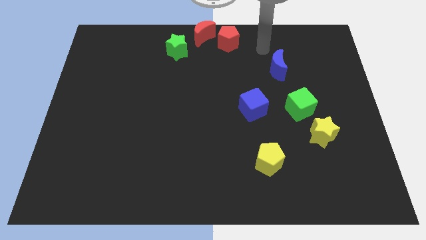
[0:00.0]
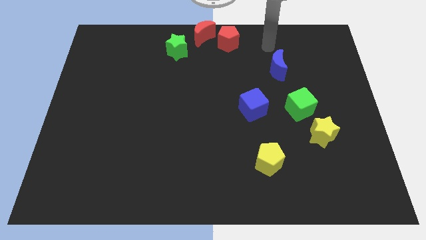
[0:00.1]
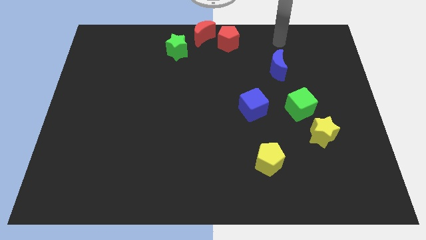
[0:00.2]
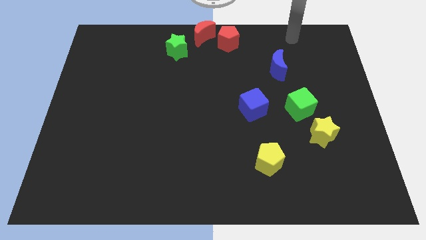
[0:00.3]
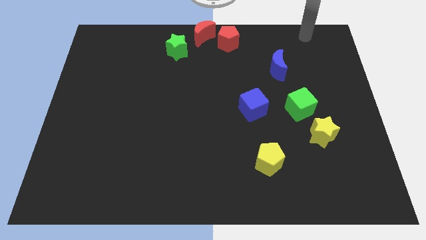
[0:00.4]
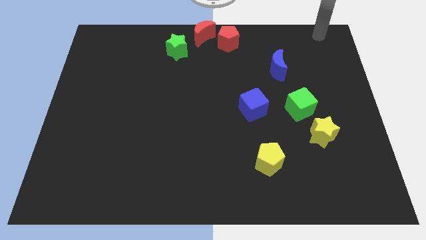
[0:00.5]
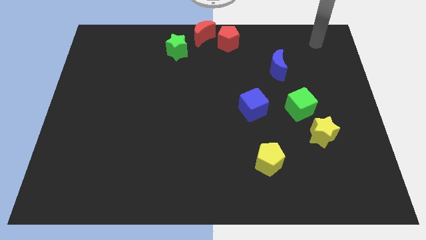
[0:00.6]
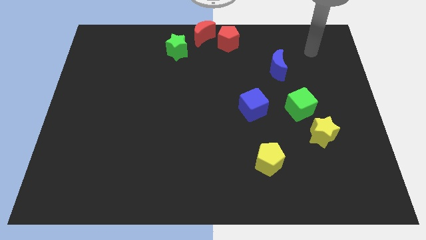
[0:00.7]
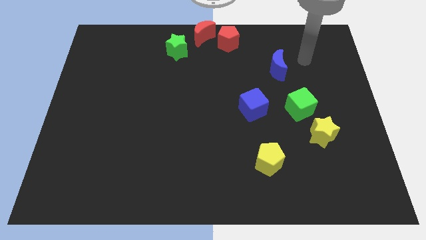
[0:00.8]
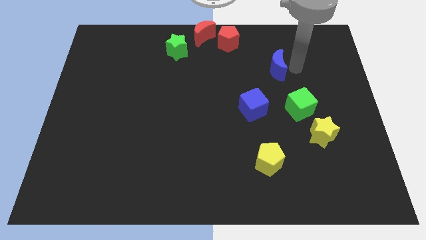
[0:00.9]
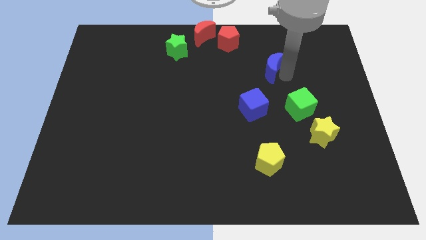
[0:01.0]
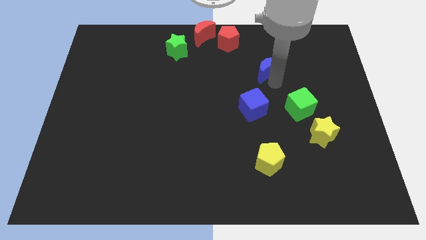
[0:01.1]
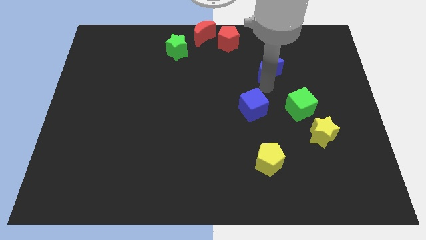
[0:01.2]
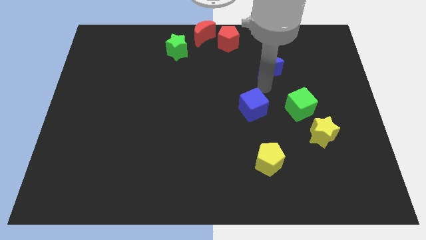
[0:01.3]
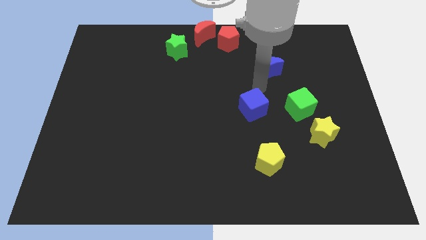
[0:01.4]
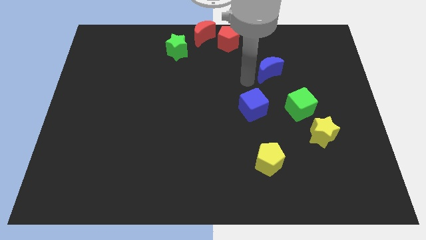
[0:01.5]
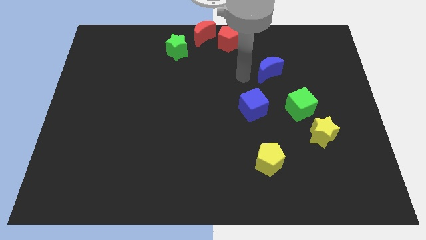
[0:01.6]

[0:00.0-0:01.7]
drag your arm to the blue moon

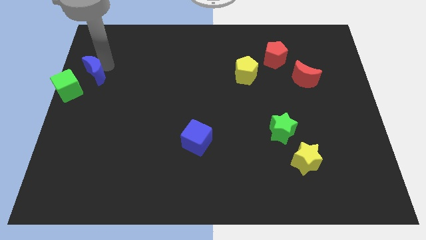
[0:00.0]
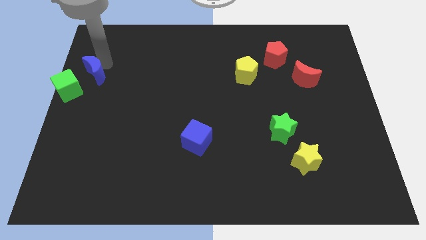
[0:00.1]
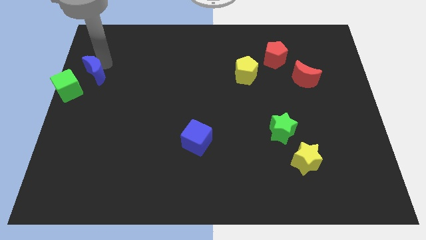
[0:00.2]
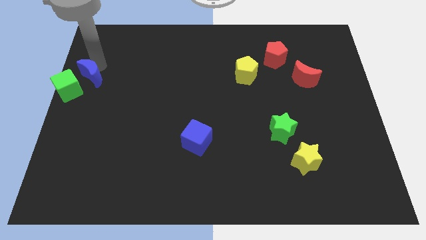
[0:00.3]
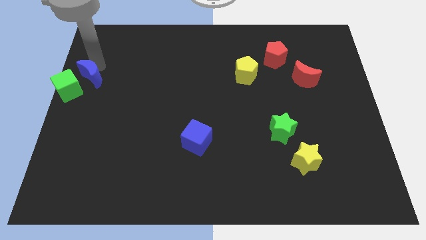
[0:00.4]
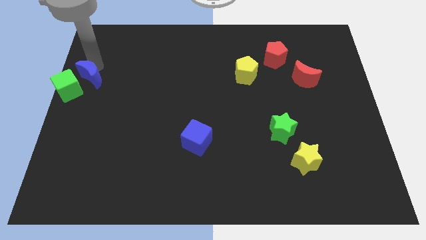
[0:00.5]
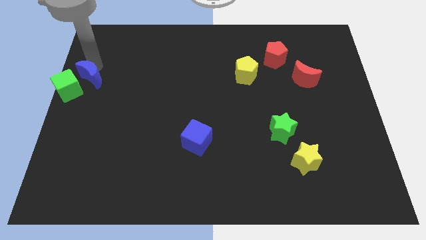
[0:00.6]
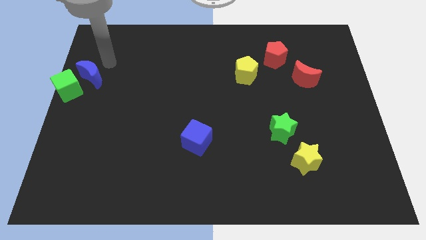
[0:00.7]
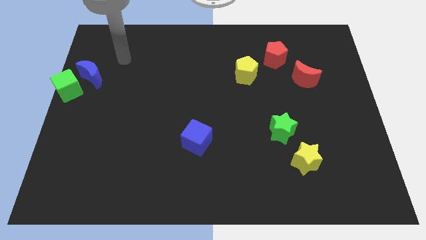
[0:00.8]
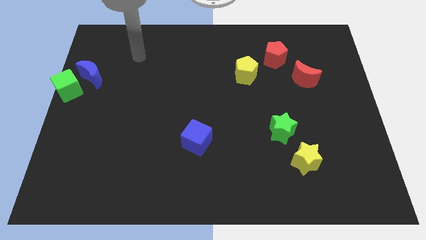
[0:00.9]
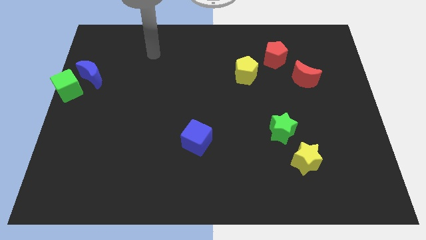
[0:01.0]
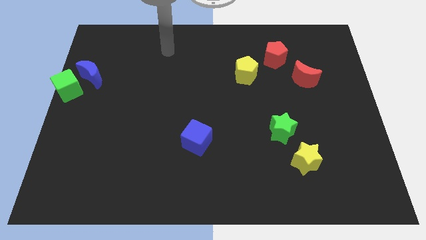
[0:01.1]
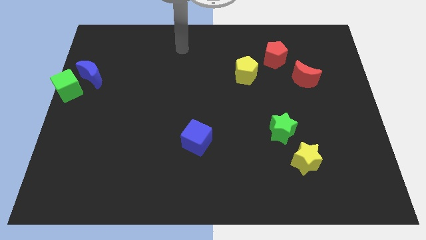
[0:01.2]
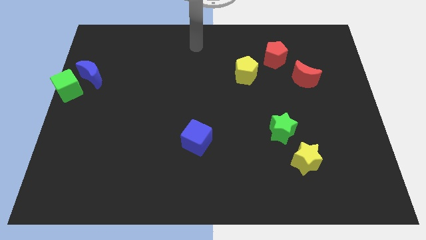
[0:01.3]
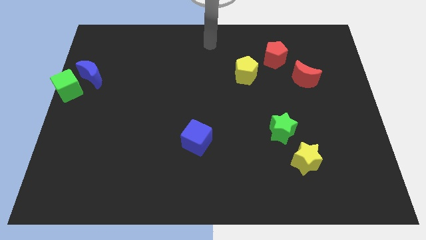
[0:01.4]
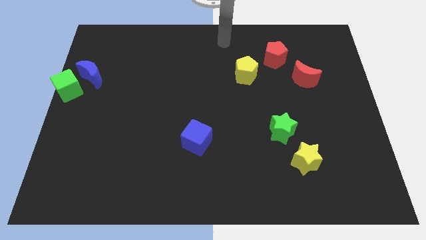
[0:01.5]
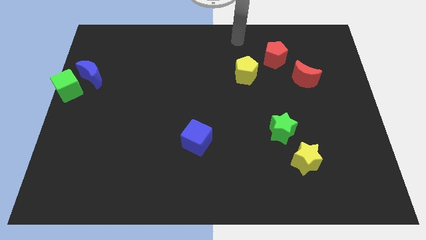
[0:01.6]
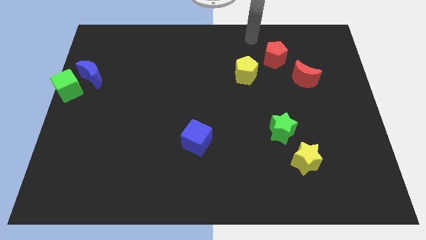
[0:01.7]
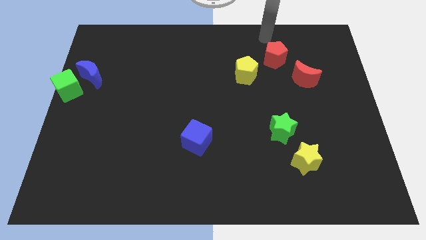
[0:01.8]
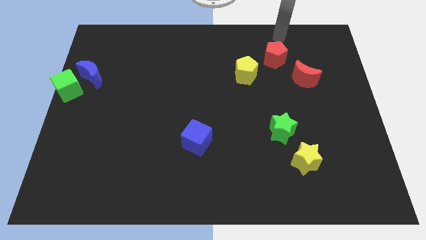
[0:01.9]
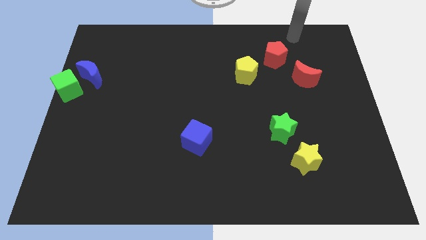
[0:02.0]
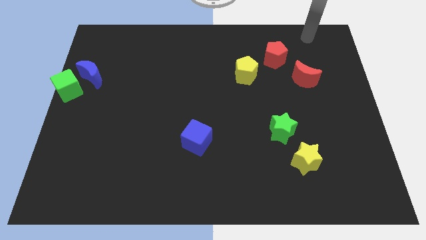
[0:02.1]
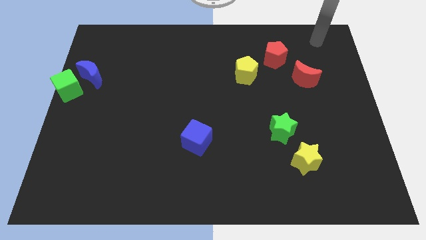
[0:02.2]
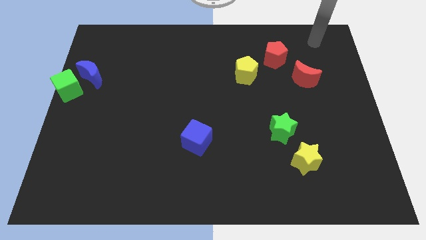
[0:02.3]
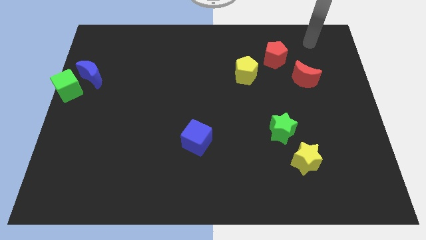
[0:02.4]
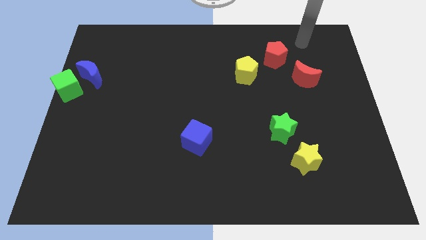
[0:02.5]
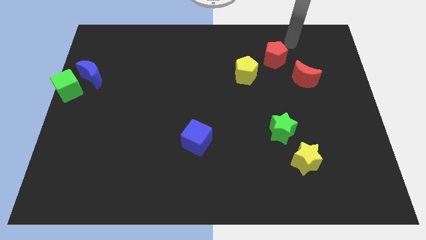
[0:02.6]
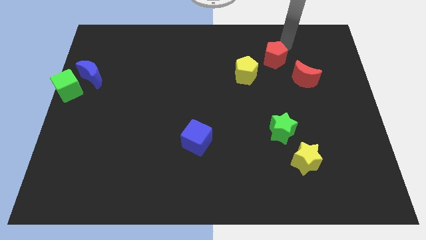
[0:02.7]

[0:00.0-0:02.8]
place the arm above the red pentagon

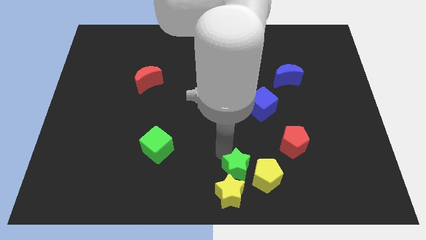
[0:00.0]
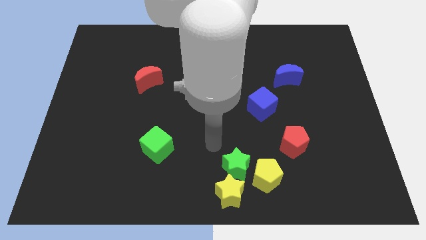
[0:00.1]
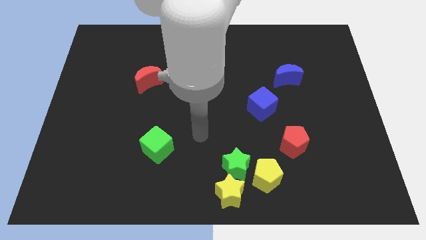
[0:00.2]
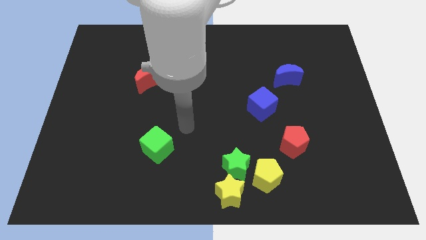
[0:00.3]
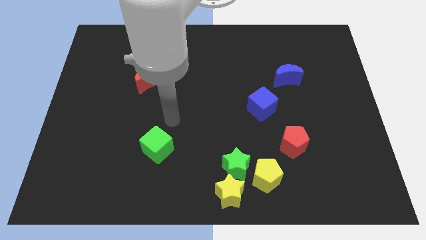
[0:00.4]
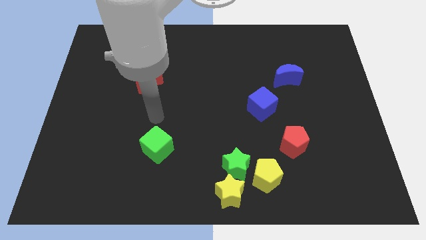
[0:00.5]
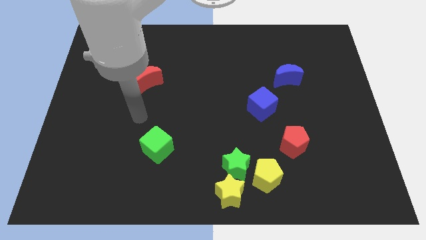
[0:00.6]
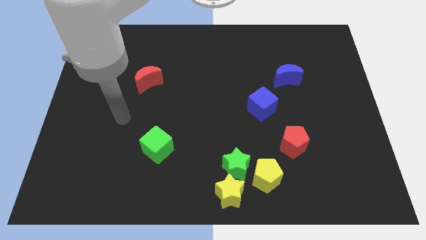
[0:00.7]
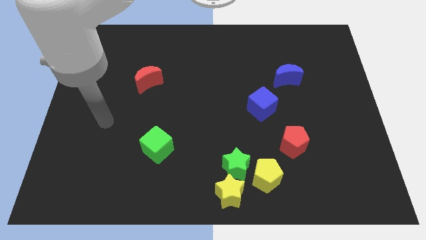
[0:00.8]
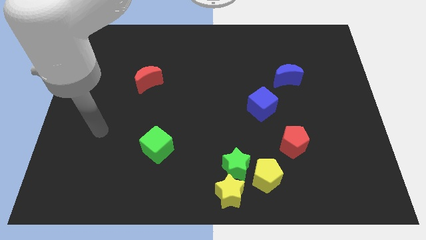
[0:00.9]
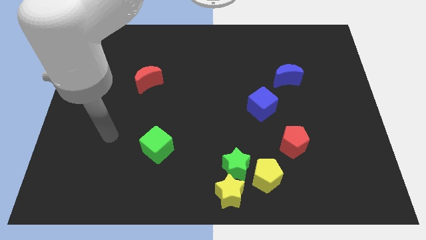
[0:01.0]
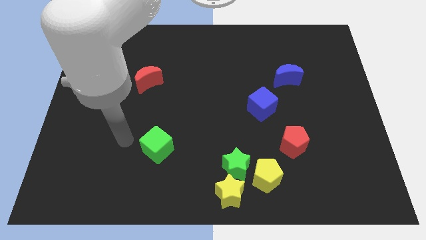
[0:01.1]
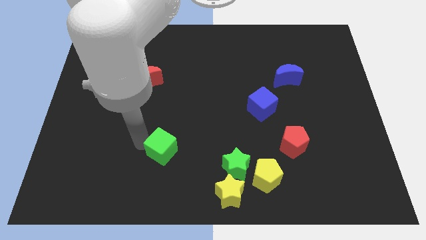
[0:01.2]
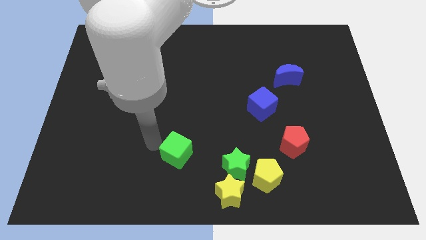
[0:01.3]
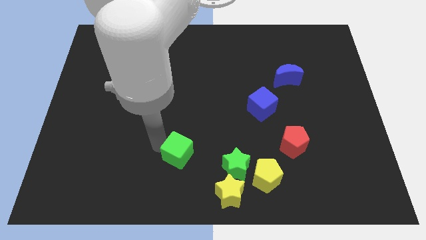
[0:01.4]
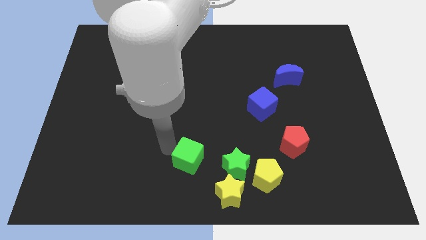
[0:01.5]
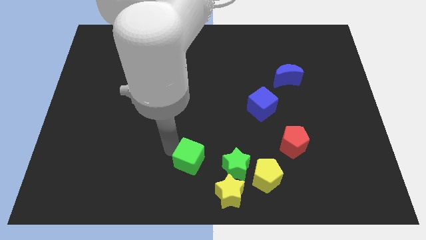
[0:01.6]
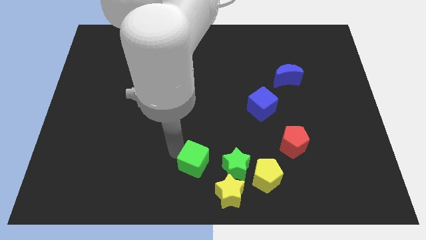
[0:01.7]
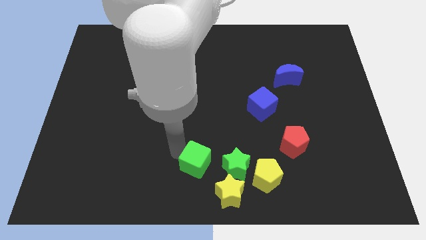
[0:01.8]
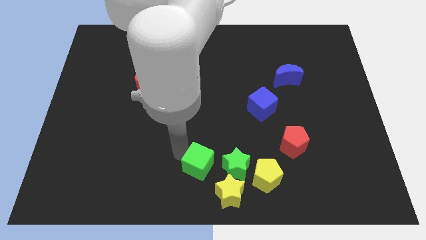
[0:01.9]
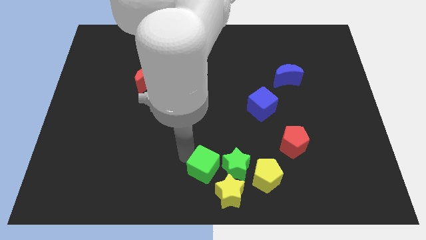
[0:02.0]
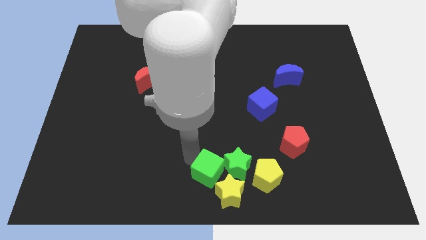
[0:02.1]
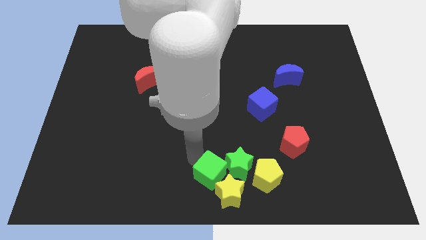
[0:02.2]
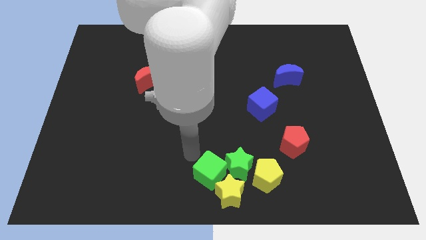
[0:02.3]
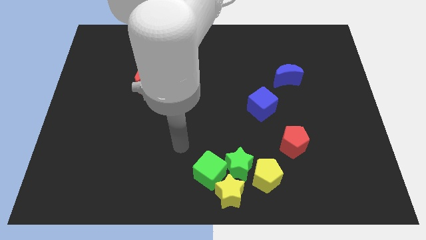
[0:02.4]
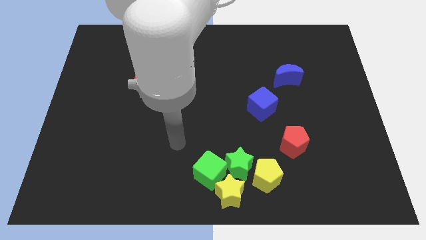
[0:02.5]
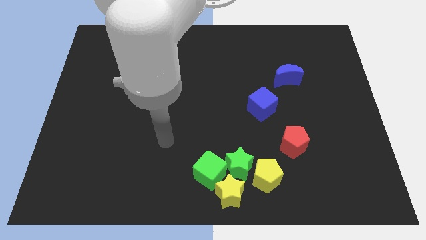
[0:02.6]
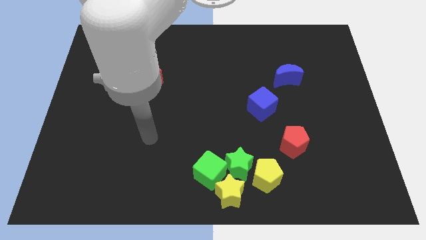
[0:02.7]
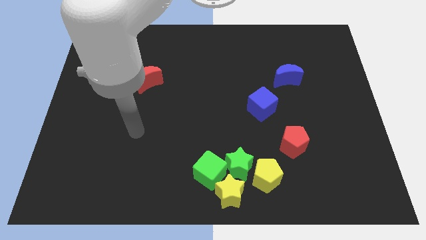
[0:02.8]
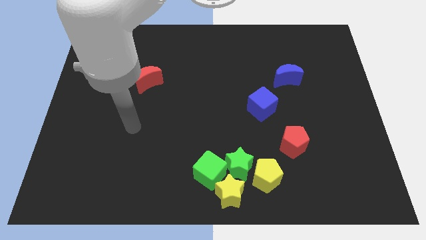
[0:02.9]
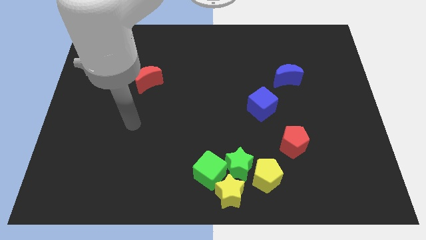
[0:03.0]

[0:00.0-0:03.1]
push the green cube into the group of stars

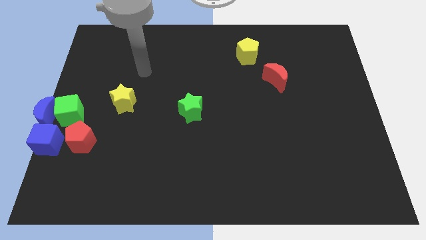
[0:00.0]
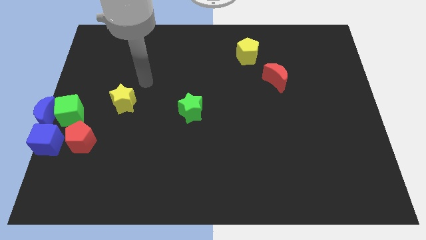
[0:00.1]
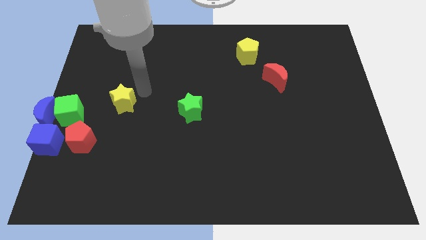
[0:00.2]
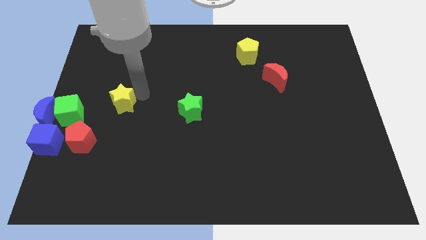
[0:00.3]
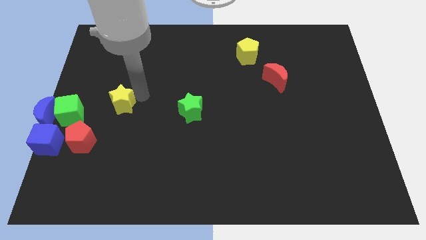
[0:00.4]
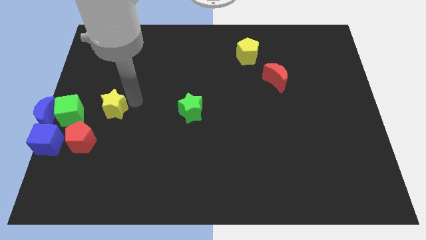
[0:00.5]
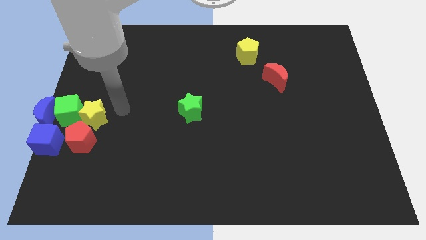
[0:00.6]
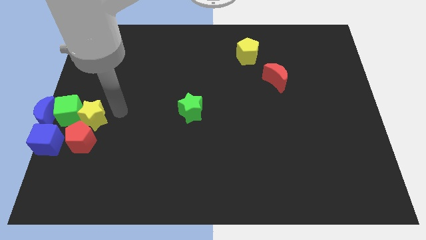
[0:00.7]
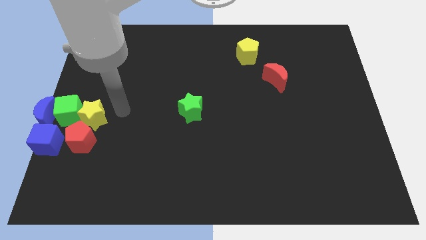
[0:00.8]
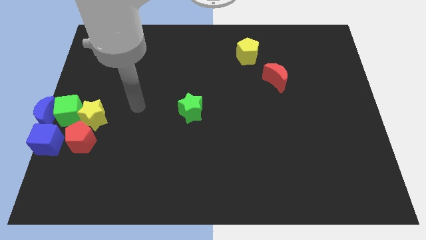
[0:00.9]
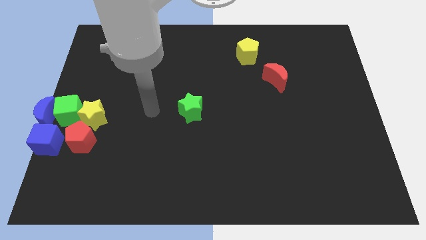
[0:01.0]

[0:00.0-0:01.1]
push the yellow star into group of blocks

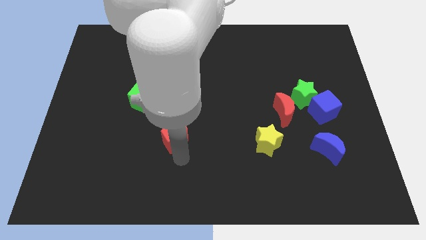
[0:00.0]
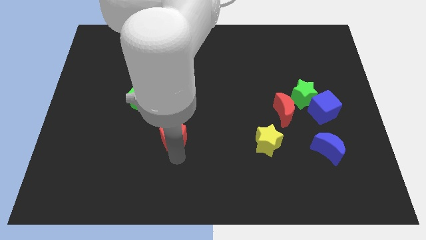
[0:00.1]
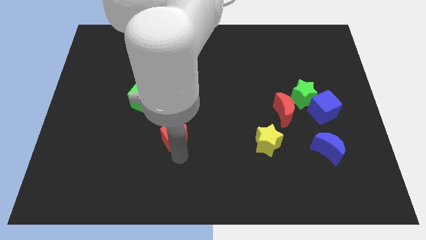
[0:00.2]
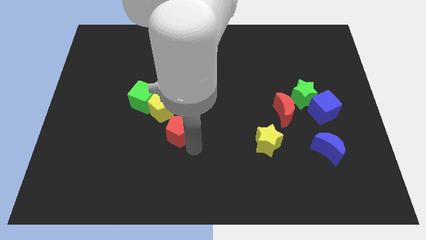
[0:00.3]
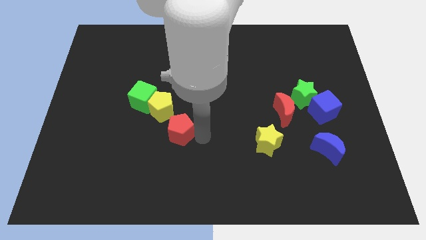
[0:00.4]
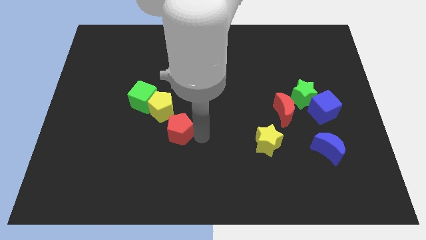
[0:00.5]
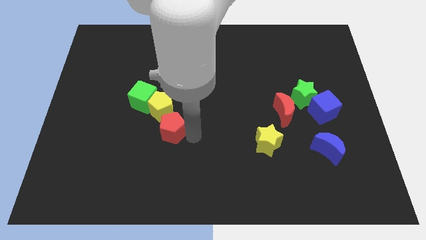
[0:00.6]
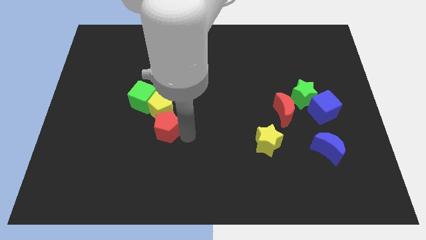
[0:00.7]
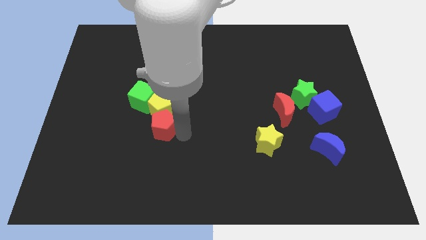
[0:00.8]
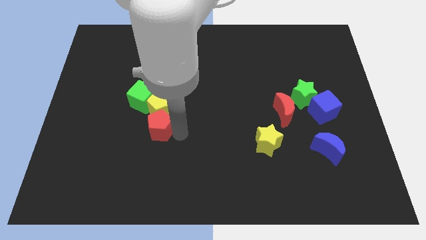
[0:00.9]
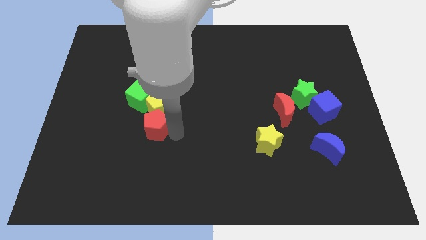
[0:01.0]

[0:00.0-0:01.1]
push the red pentagon into the yellow pentagon
